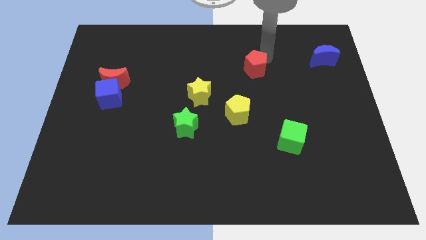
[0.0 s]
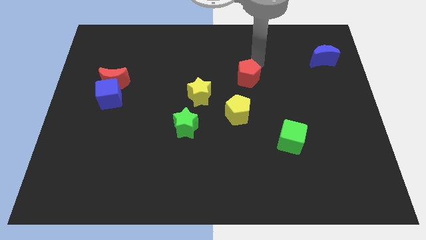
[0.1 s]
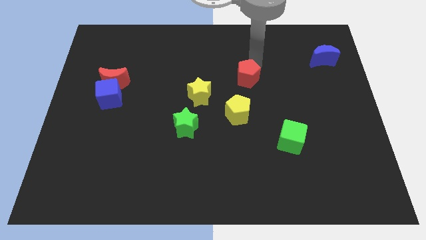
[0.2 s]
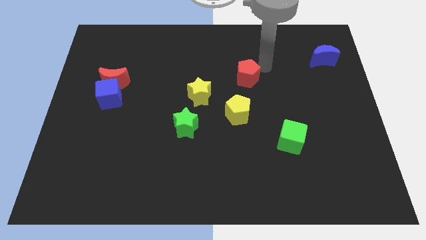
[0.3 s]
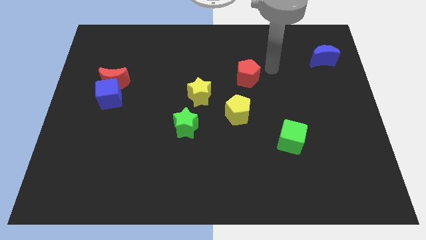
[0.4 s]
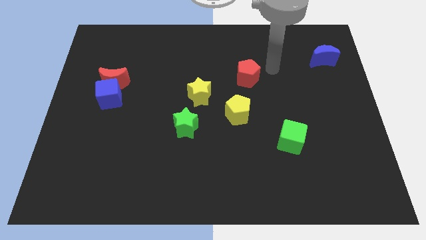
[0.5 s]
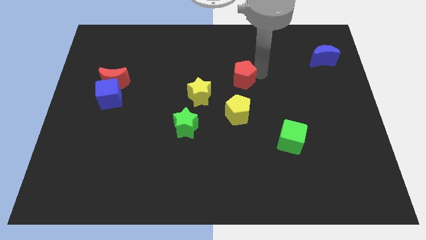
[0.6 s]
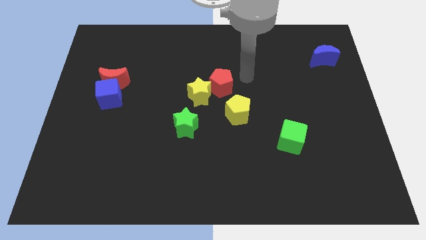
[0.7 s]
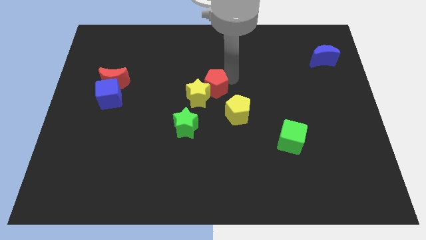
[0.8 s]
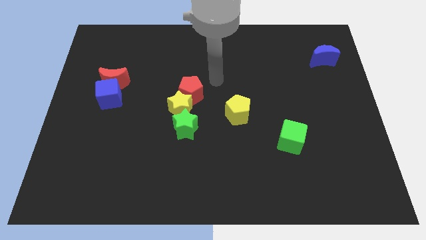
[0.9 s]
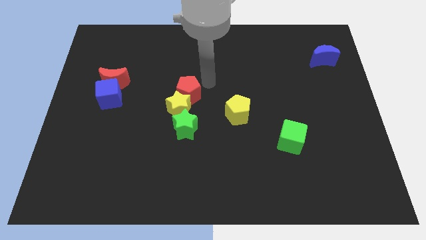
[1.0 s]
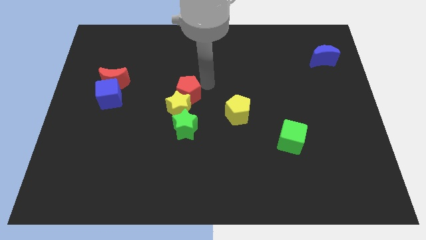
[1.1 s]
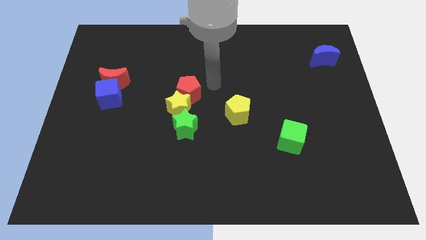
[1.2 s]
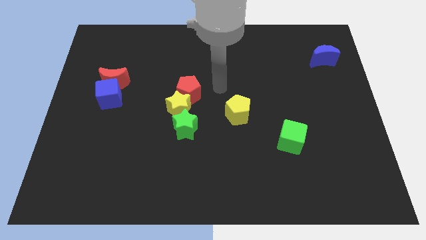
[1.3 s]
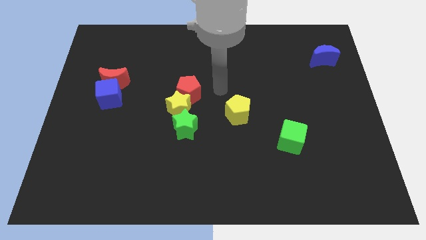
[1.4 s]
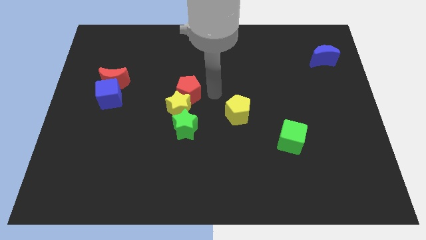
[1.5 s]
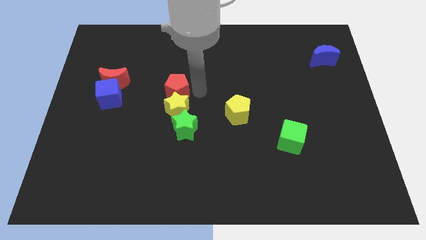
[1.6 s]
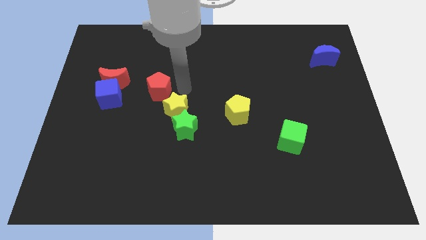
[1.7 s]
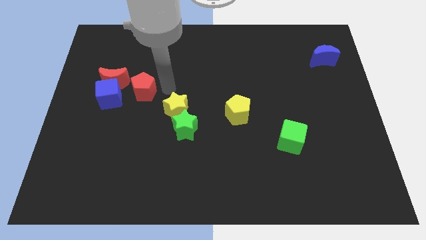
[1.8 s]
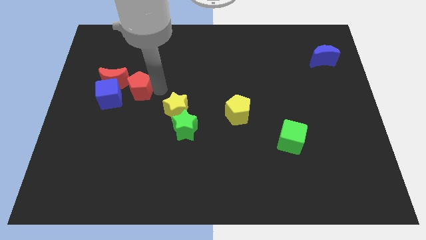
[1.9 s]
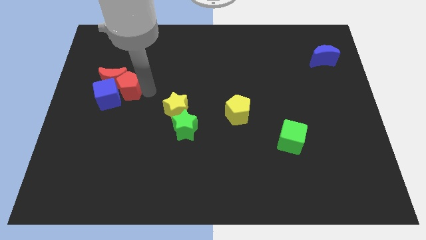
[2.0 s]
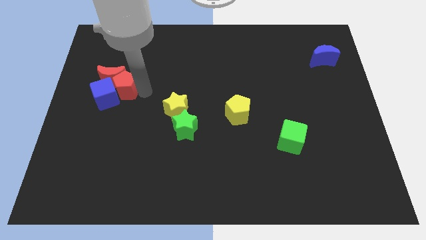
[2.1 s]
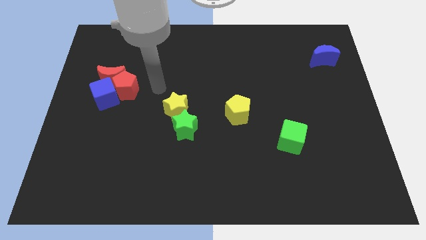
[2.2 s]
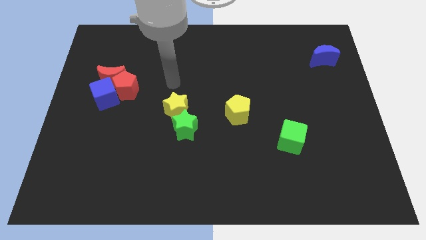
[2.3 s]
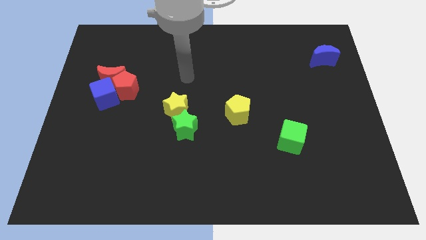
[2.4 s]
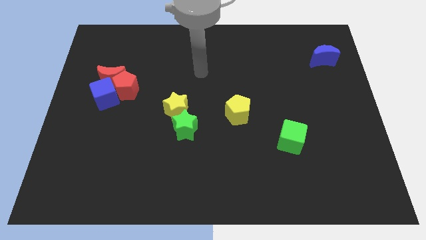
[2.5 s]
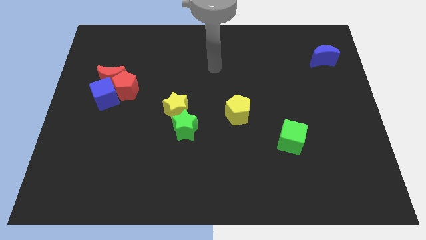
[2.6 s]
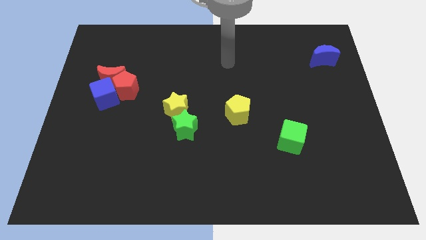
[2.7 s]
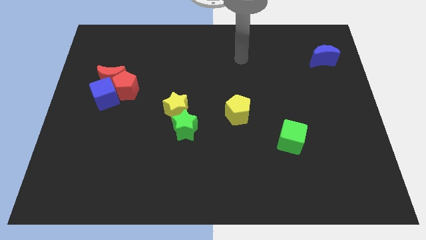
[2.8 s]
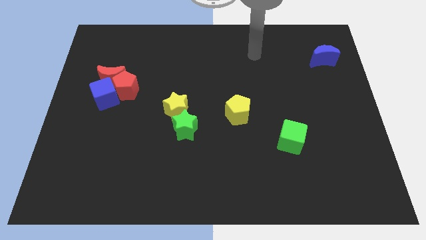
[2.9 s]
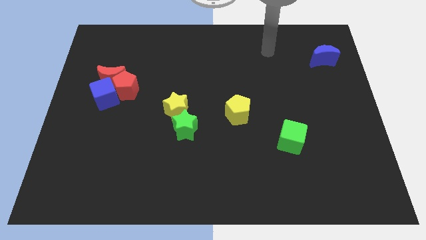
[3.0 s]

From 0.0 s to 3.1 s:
push red pentagon beside blue cube

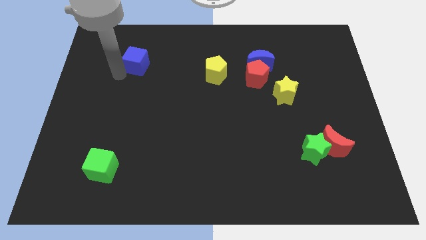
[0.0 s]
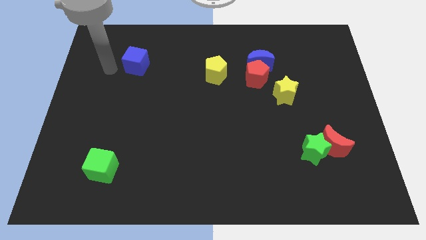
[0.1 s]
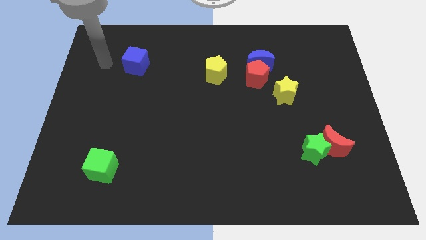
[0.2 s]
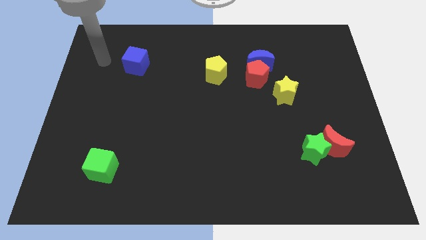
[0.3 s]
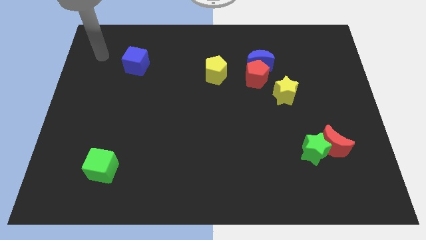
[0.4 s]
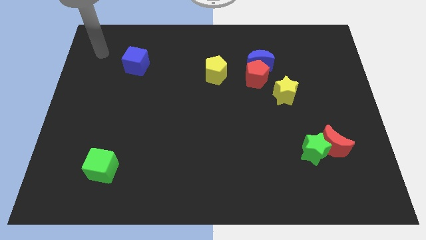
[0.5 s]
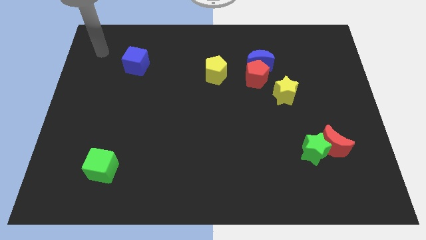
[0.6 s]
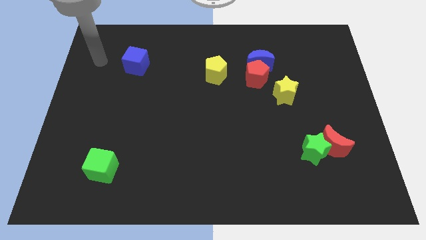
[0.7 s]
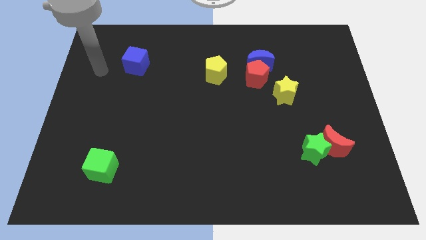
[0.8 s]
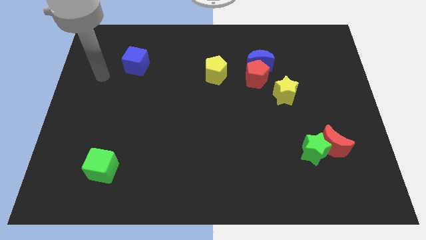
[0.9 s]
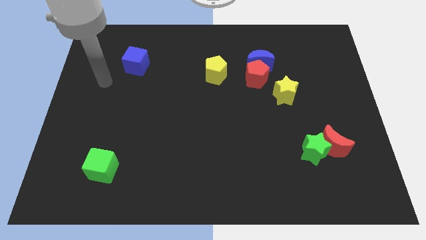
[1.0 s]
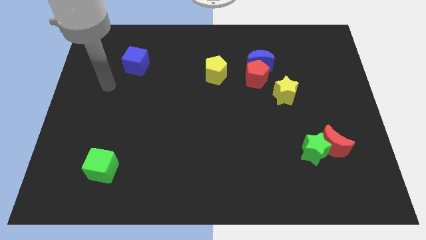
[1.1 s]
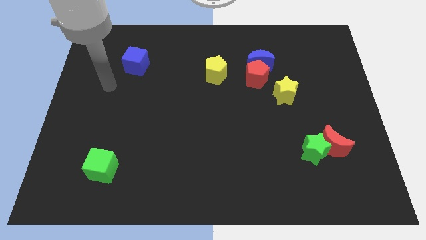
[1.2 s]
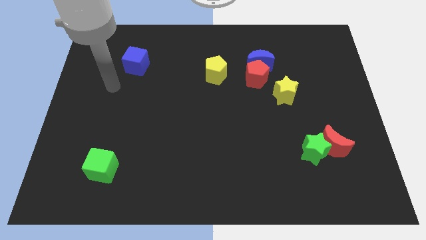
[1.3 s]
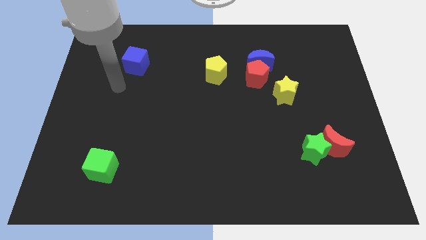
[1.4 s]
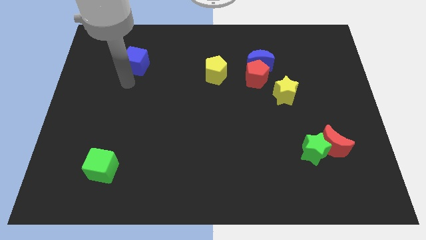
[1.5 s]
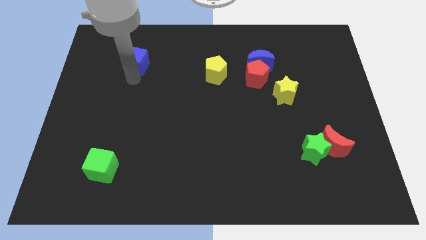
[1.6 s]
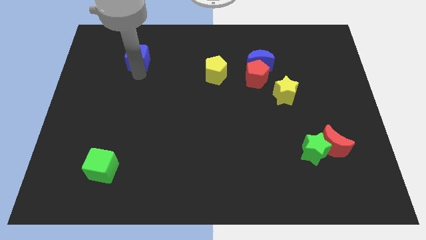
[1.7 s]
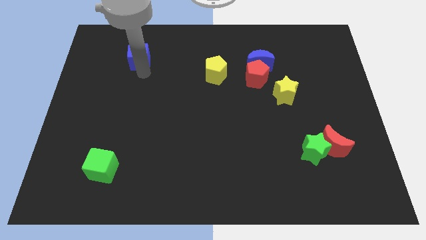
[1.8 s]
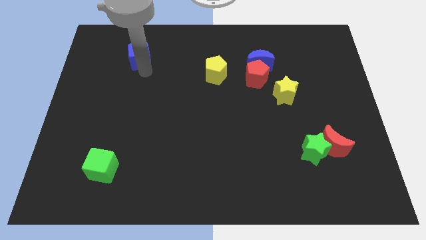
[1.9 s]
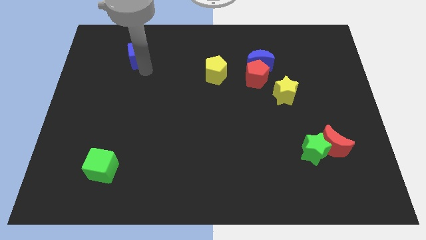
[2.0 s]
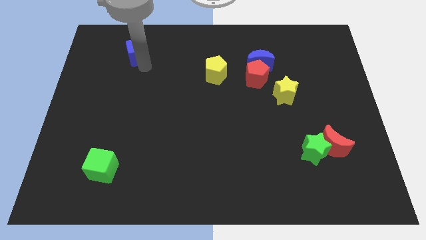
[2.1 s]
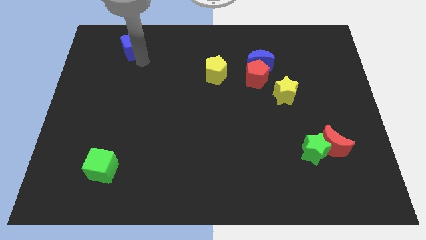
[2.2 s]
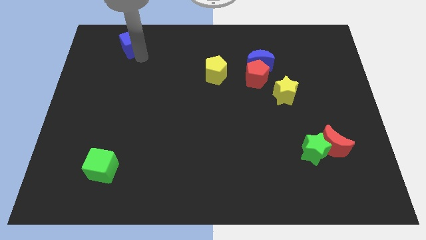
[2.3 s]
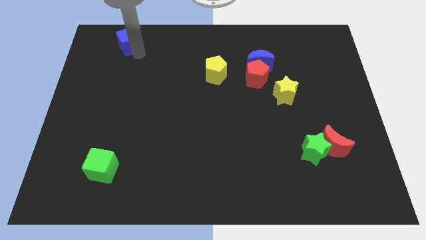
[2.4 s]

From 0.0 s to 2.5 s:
place the blue cube vertically above the green cube

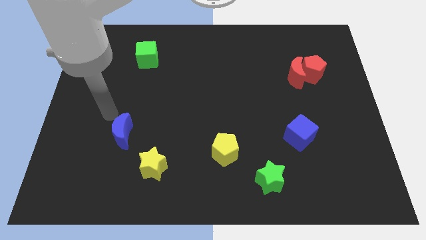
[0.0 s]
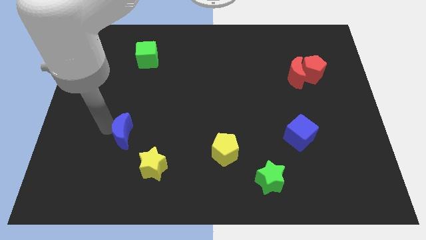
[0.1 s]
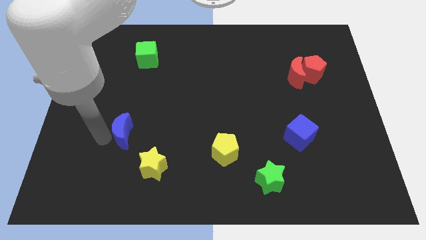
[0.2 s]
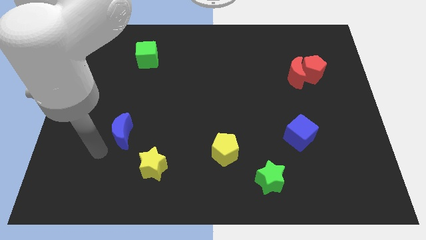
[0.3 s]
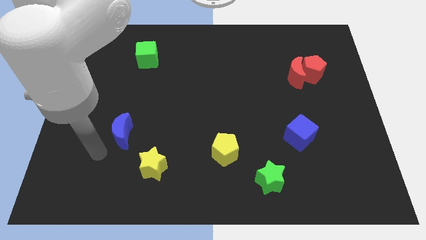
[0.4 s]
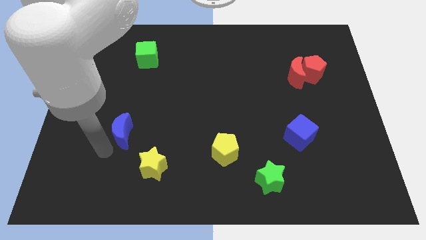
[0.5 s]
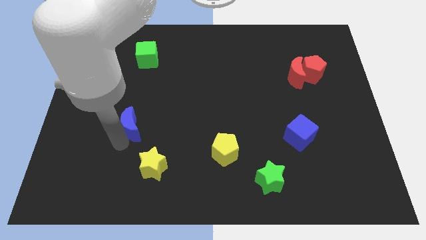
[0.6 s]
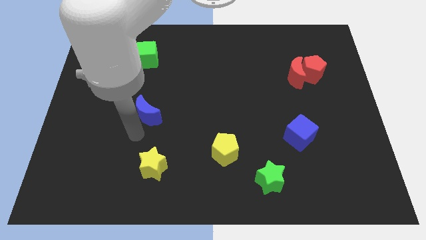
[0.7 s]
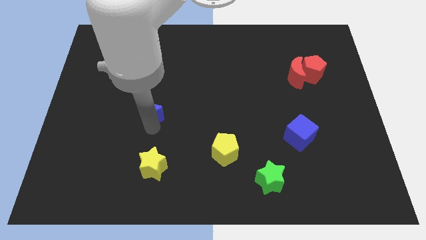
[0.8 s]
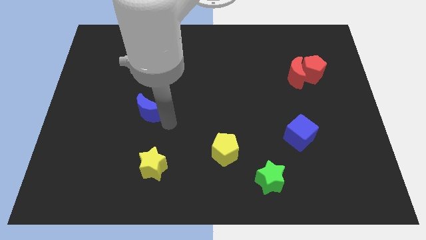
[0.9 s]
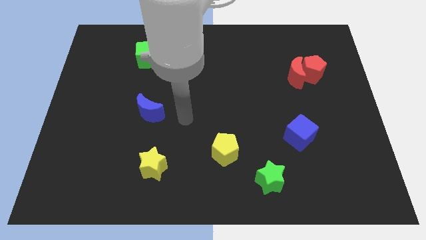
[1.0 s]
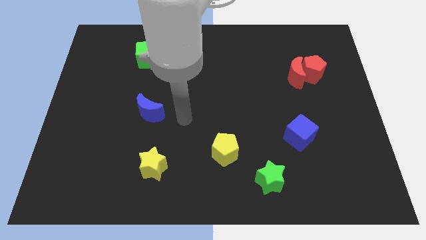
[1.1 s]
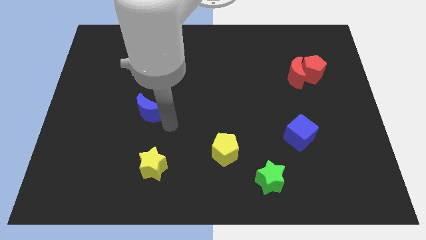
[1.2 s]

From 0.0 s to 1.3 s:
put the blue moon vertically above the yellow star

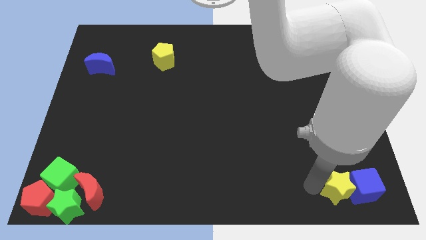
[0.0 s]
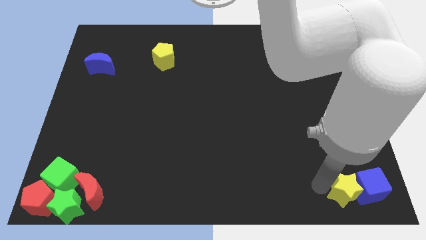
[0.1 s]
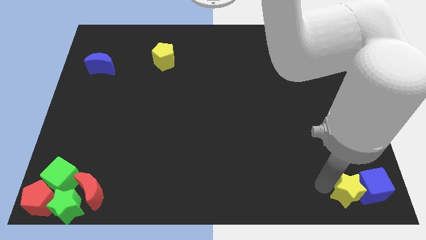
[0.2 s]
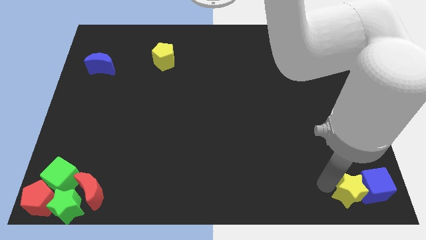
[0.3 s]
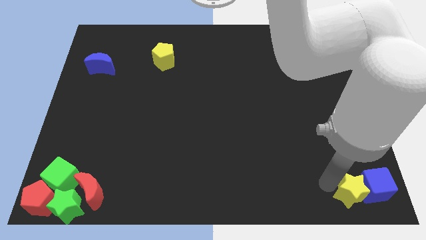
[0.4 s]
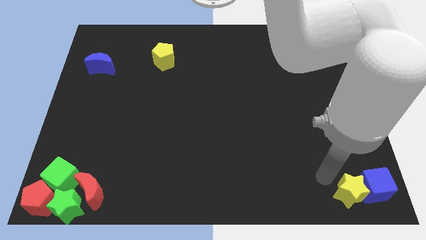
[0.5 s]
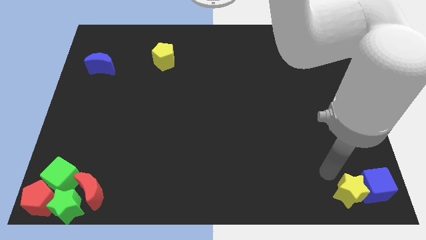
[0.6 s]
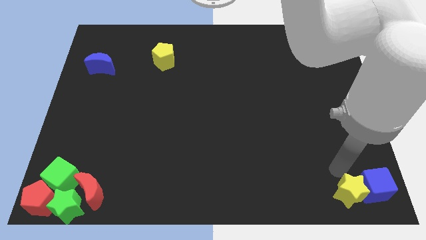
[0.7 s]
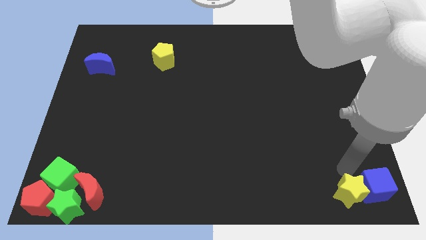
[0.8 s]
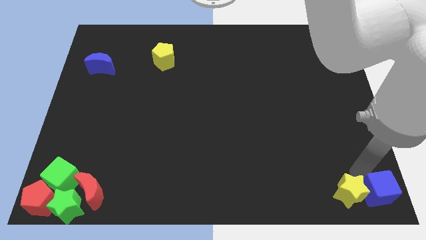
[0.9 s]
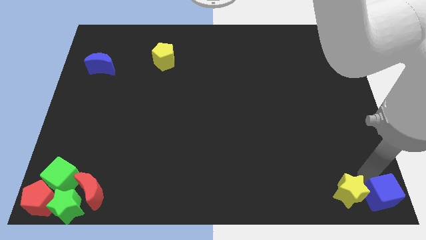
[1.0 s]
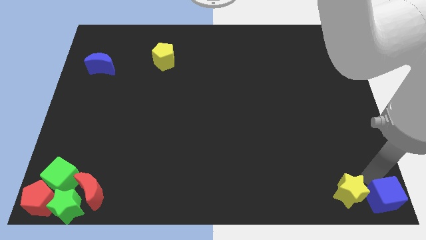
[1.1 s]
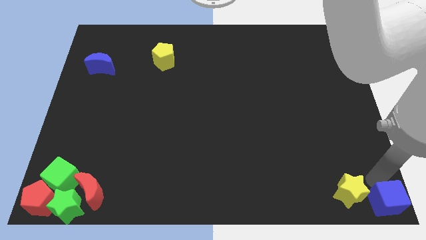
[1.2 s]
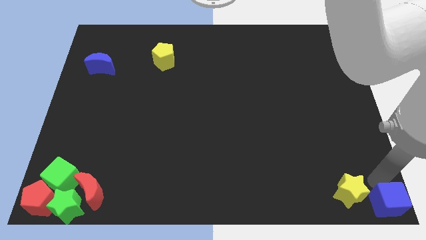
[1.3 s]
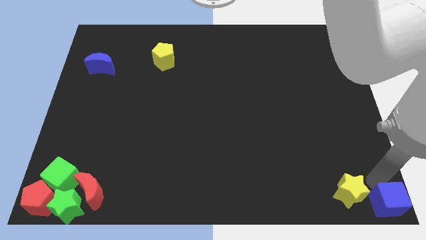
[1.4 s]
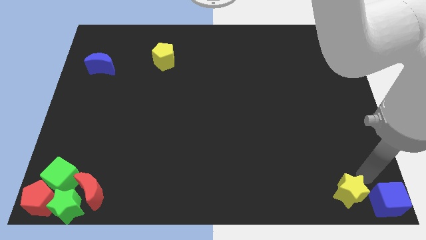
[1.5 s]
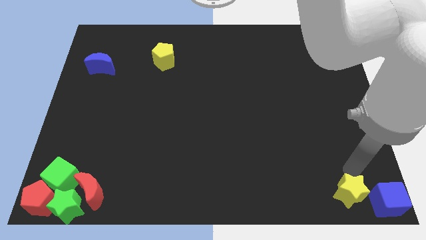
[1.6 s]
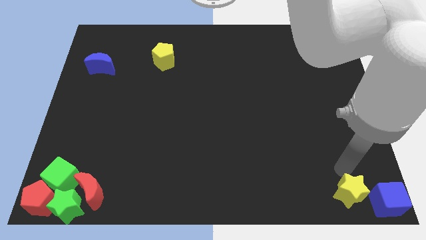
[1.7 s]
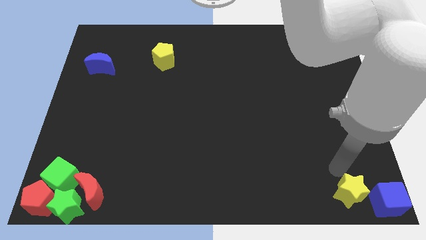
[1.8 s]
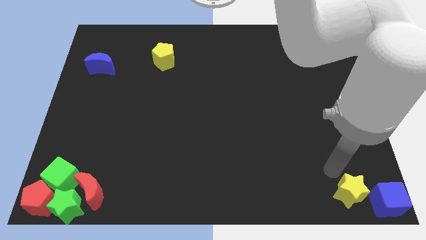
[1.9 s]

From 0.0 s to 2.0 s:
push the yellow star with blue cube to the bottom right
